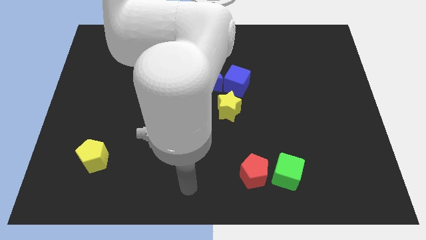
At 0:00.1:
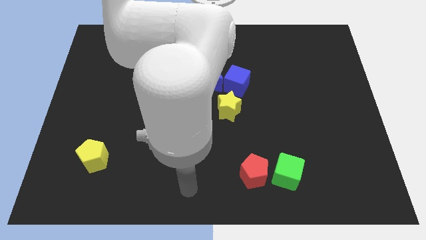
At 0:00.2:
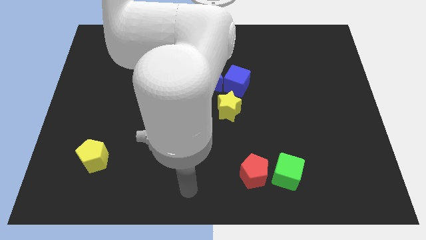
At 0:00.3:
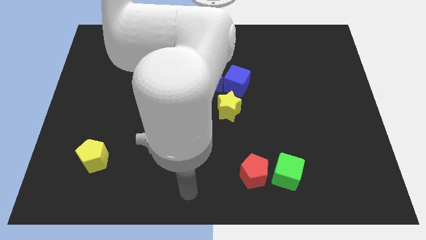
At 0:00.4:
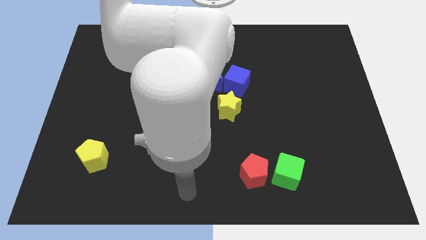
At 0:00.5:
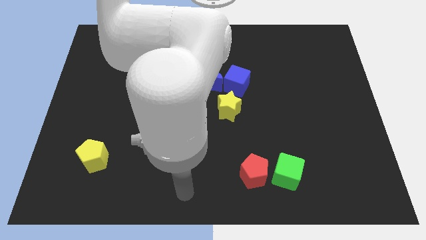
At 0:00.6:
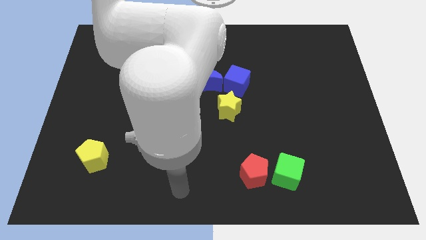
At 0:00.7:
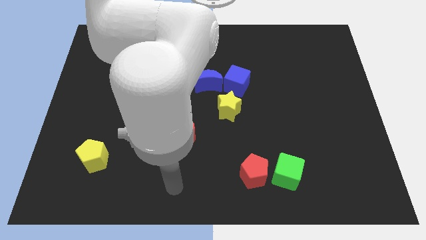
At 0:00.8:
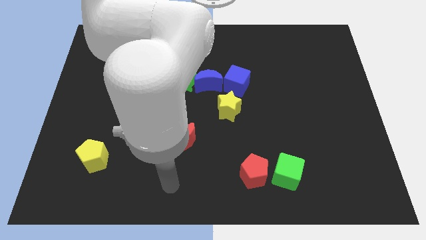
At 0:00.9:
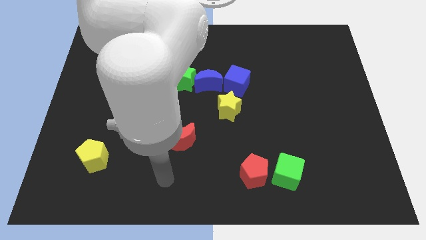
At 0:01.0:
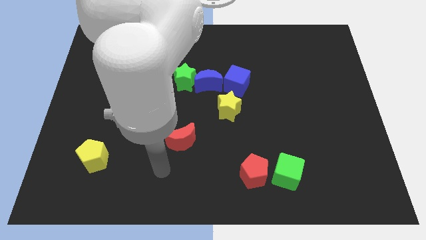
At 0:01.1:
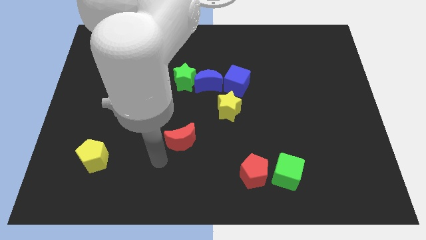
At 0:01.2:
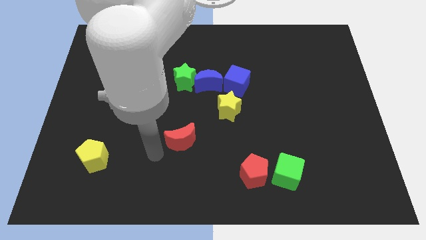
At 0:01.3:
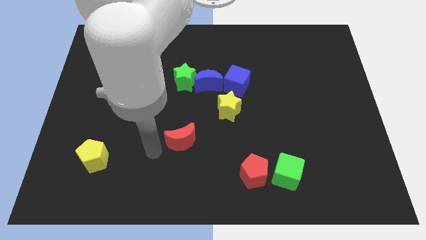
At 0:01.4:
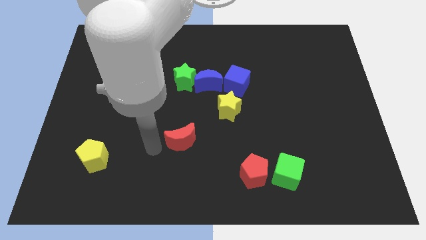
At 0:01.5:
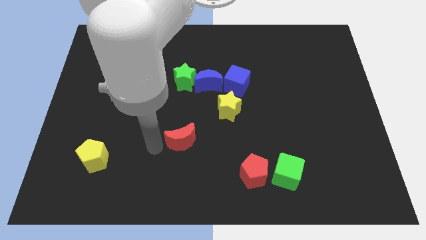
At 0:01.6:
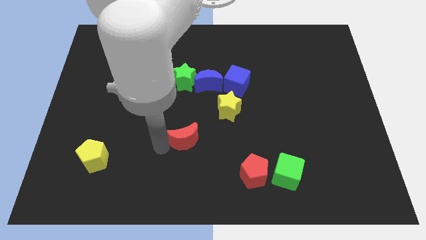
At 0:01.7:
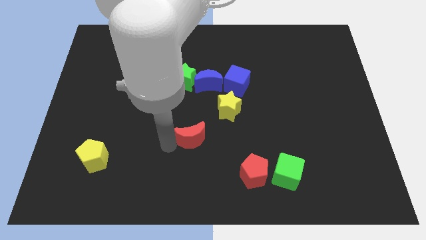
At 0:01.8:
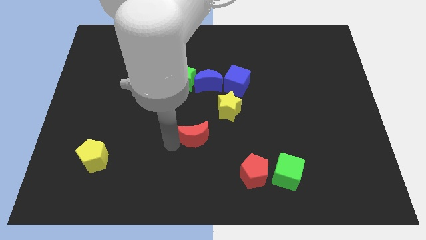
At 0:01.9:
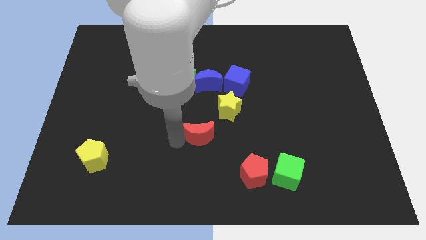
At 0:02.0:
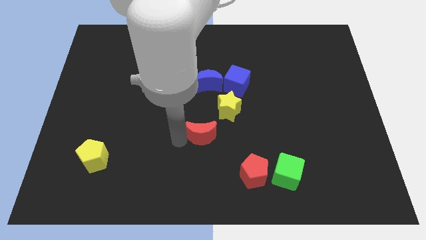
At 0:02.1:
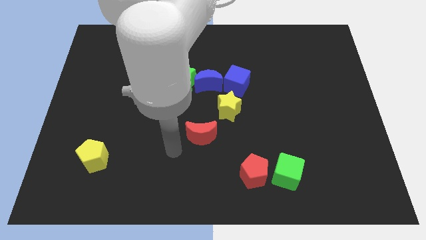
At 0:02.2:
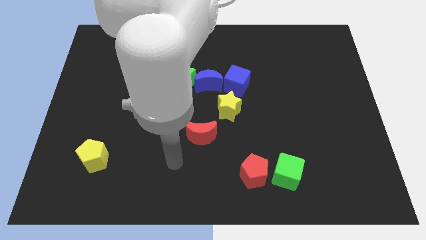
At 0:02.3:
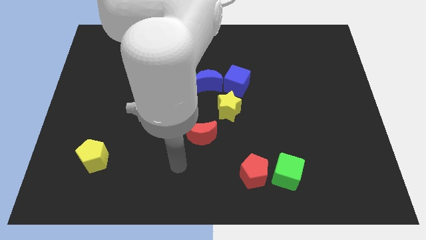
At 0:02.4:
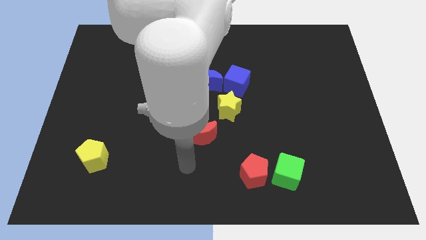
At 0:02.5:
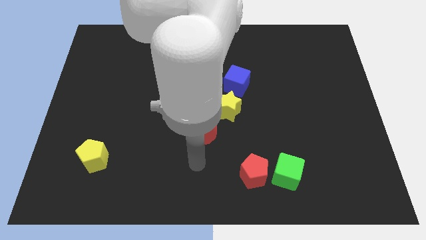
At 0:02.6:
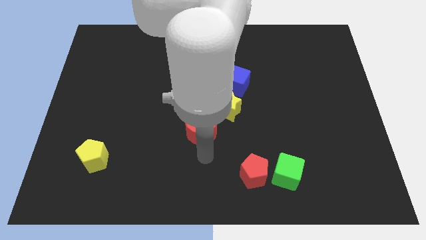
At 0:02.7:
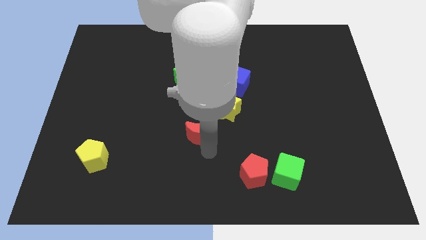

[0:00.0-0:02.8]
place red crescent below blue crescent

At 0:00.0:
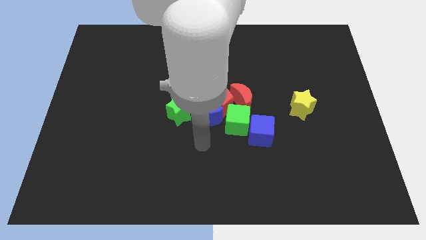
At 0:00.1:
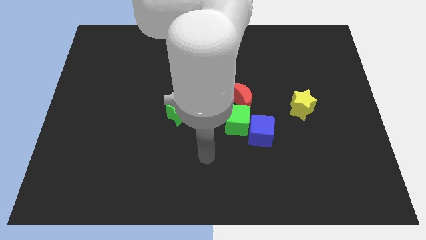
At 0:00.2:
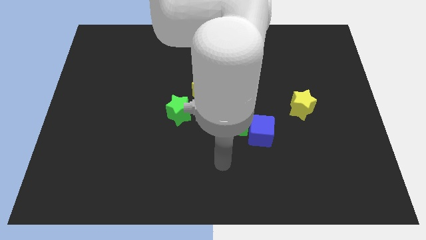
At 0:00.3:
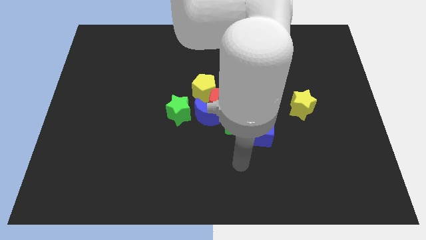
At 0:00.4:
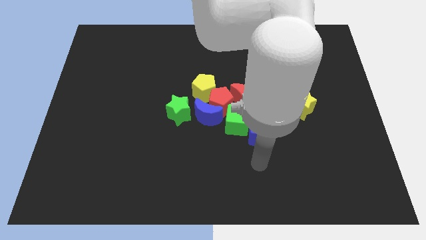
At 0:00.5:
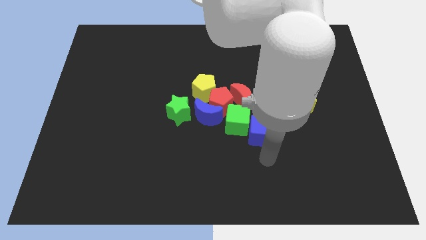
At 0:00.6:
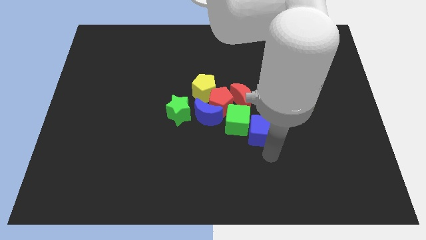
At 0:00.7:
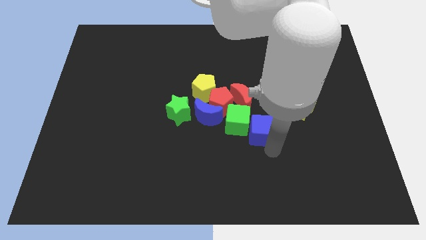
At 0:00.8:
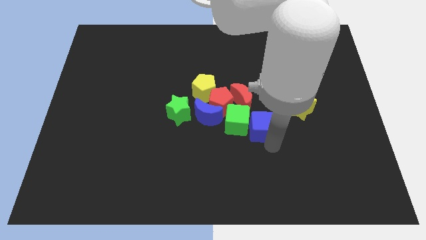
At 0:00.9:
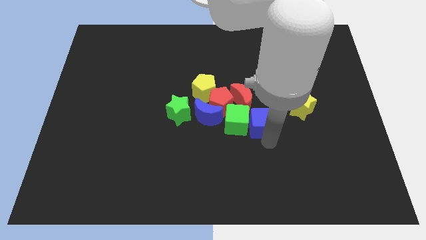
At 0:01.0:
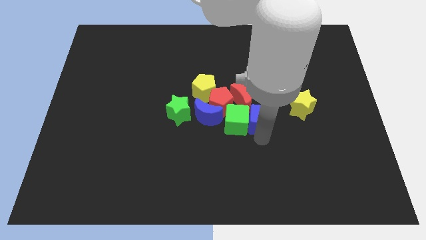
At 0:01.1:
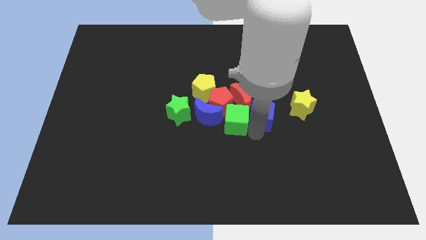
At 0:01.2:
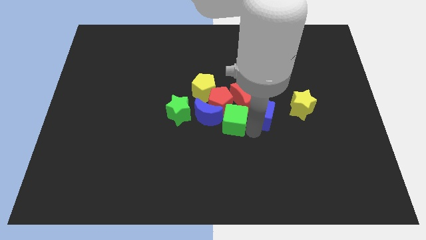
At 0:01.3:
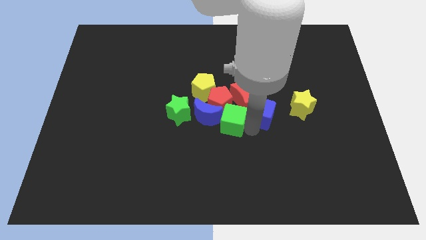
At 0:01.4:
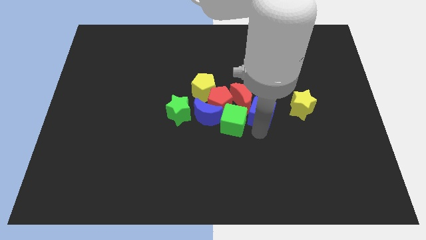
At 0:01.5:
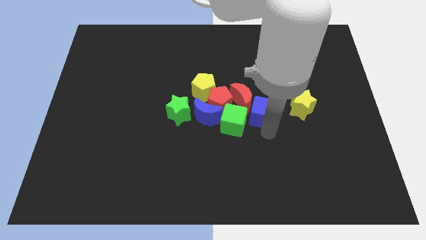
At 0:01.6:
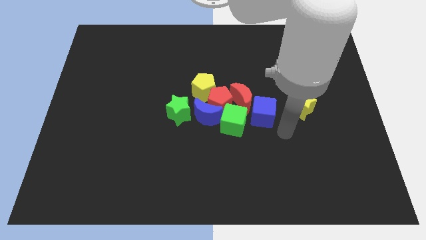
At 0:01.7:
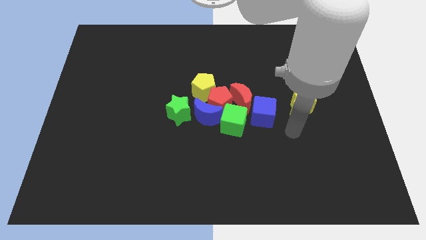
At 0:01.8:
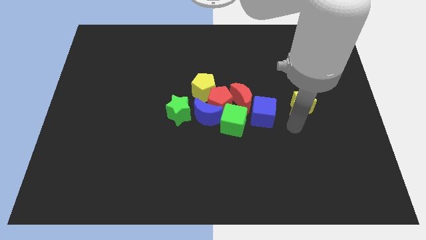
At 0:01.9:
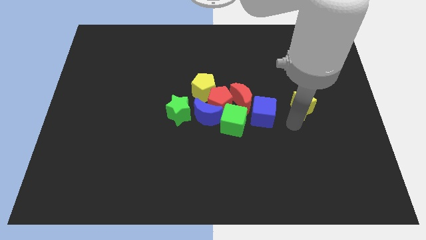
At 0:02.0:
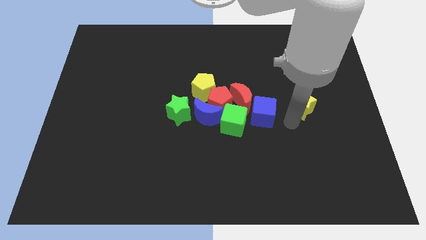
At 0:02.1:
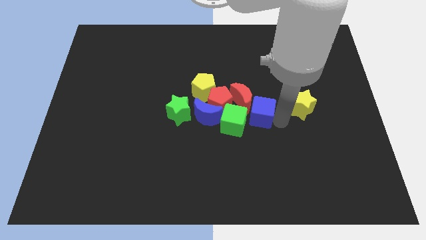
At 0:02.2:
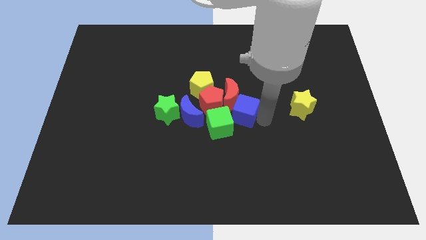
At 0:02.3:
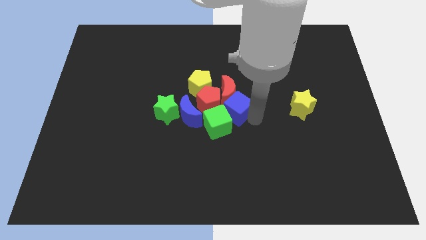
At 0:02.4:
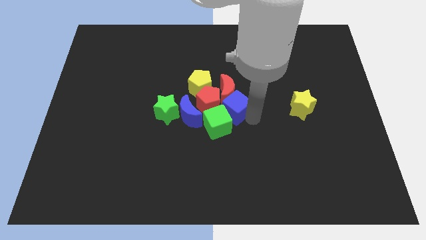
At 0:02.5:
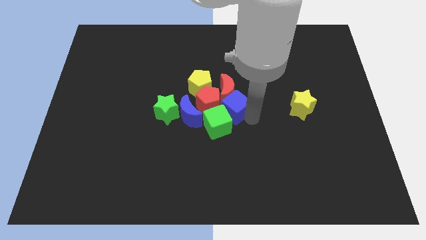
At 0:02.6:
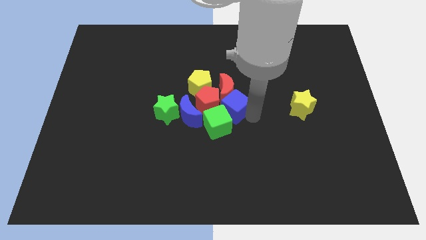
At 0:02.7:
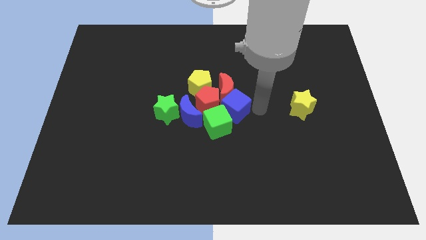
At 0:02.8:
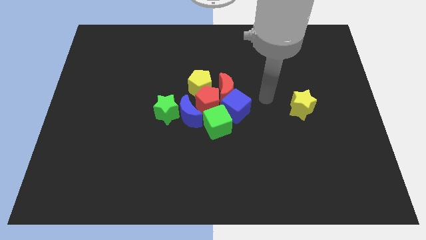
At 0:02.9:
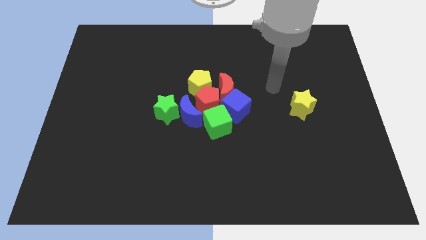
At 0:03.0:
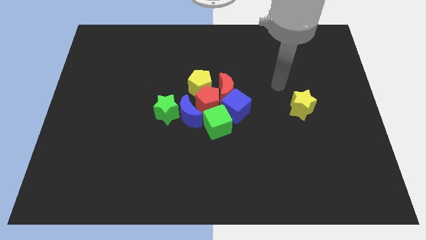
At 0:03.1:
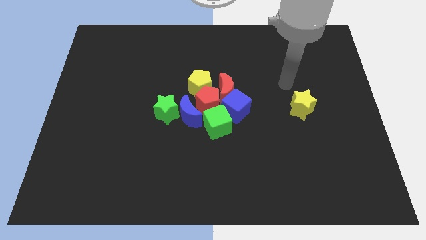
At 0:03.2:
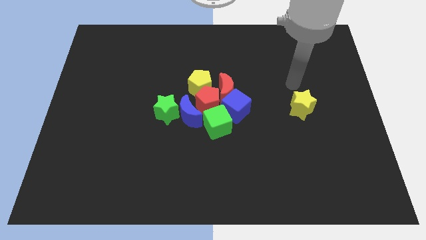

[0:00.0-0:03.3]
push blue cube into red moon

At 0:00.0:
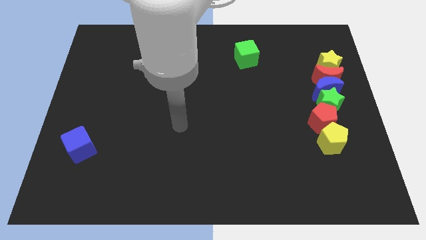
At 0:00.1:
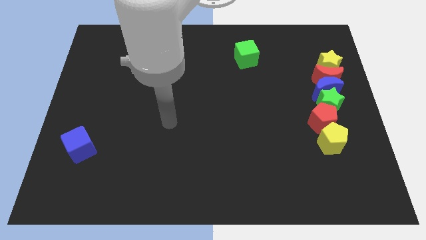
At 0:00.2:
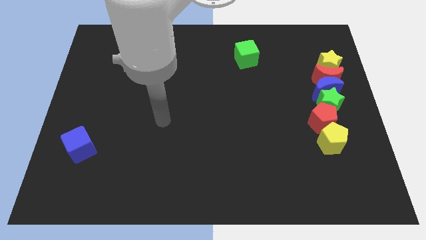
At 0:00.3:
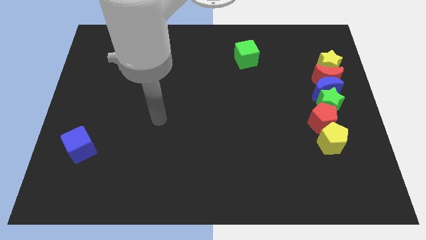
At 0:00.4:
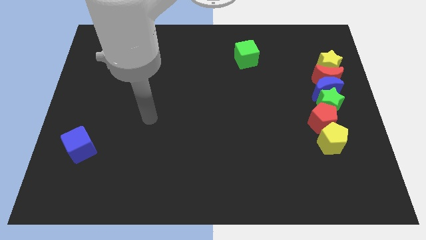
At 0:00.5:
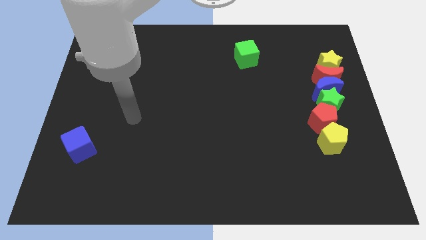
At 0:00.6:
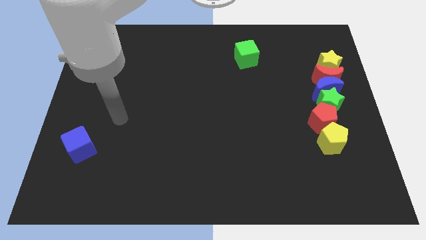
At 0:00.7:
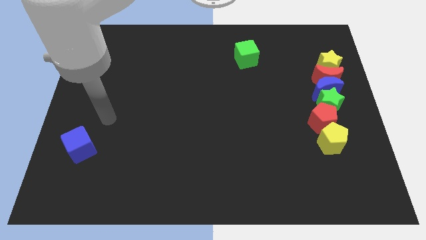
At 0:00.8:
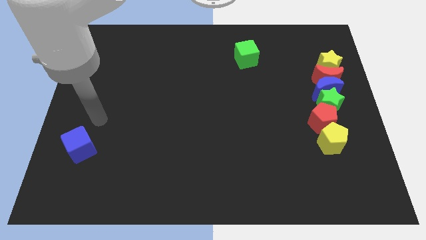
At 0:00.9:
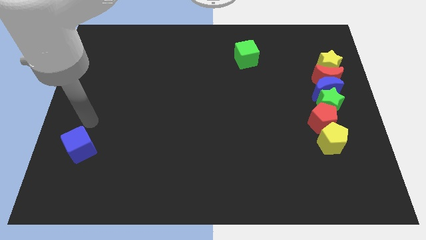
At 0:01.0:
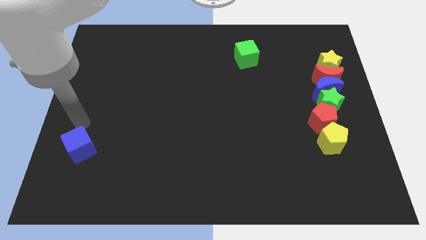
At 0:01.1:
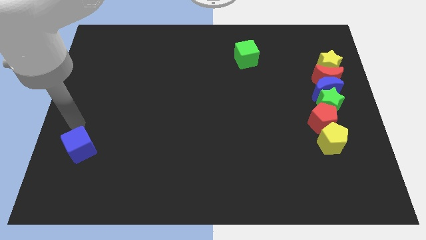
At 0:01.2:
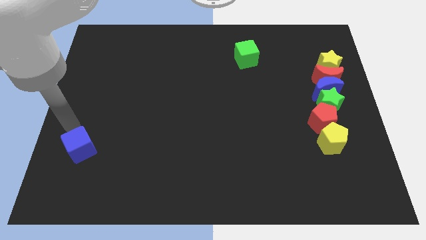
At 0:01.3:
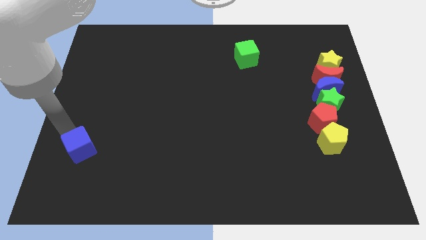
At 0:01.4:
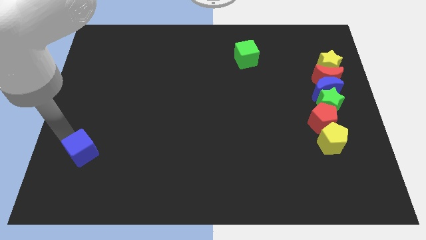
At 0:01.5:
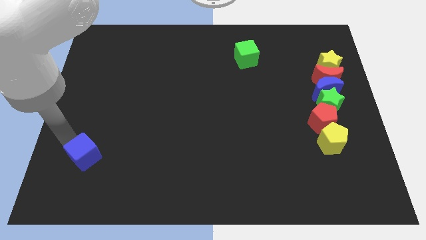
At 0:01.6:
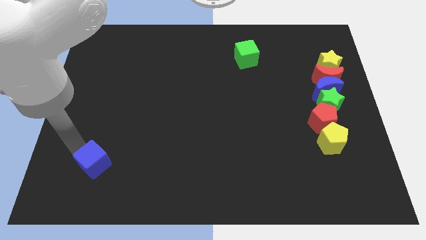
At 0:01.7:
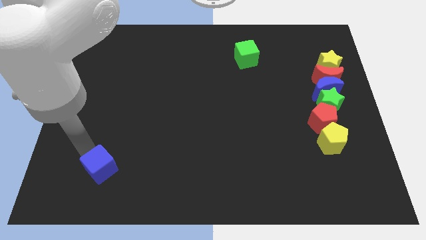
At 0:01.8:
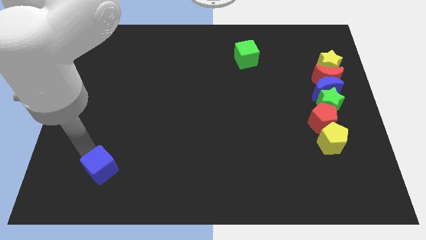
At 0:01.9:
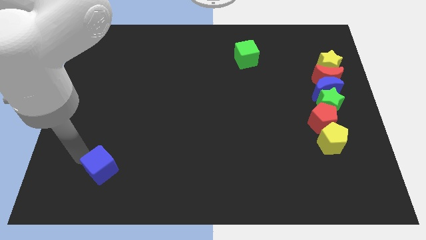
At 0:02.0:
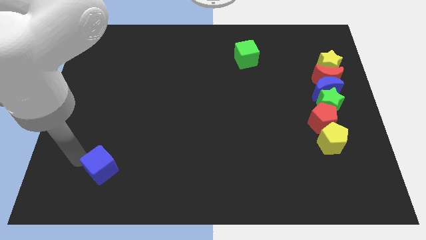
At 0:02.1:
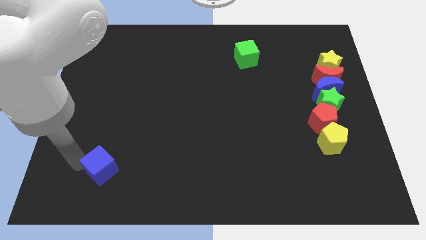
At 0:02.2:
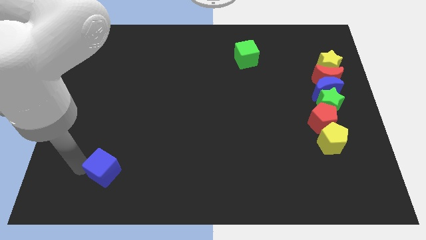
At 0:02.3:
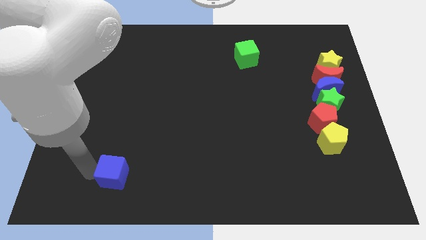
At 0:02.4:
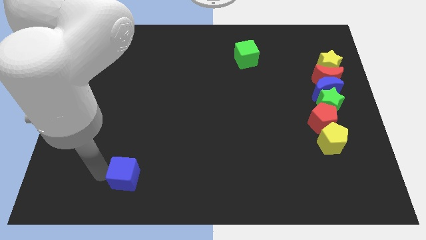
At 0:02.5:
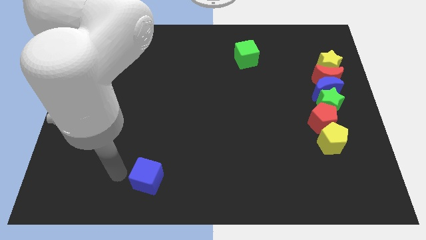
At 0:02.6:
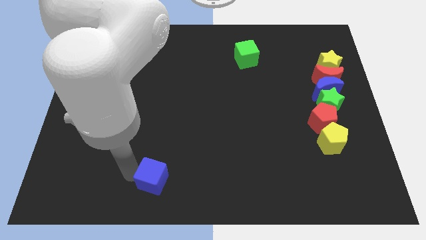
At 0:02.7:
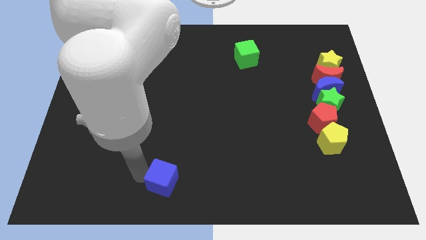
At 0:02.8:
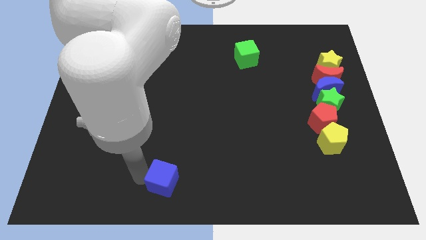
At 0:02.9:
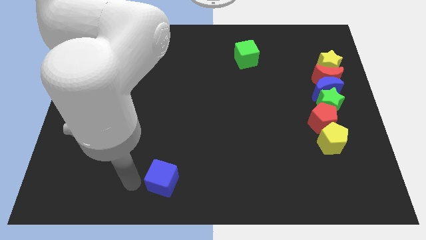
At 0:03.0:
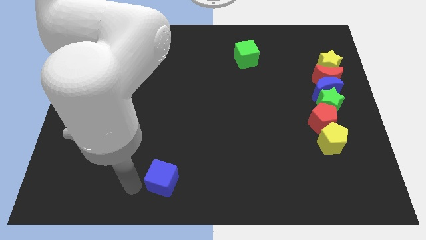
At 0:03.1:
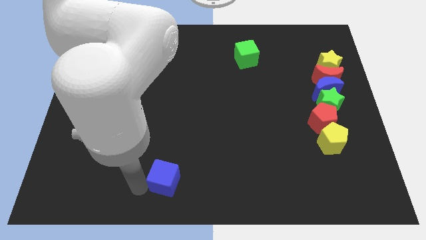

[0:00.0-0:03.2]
push the blue cube towards the bottom center of the board
